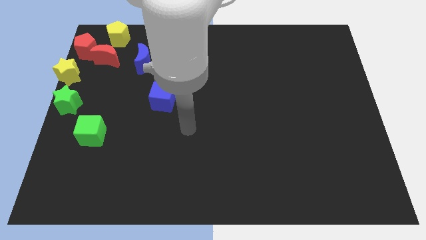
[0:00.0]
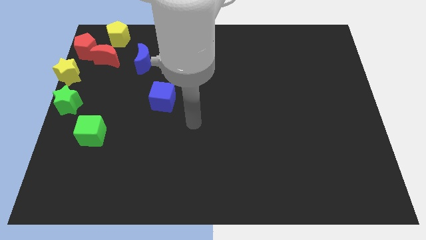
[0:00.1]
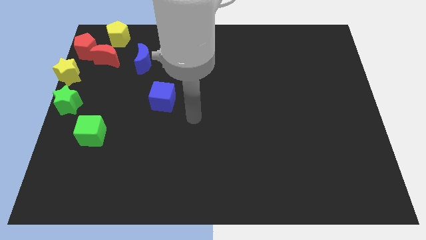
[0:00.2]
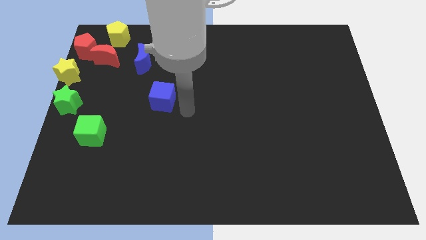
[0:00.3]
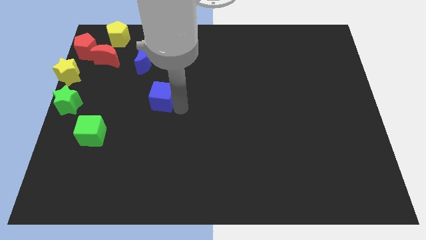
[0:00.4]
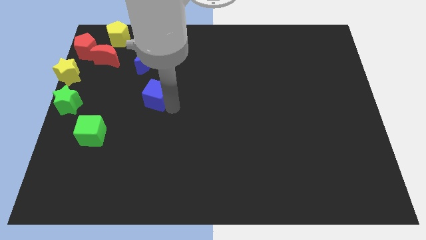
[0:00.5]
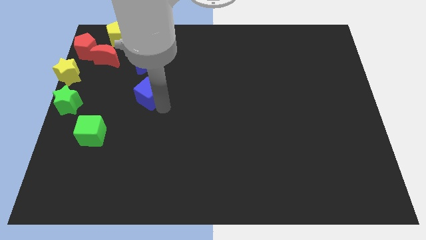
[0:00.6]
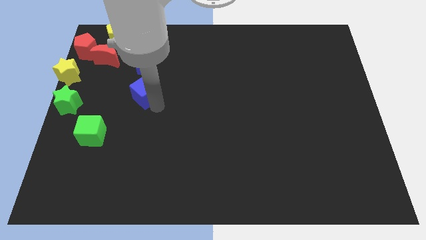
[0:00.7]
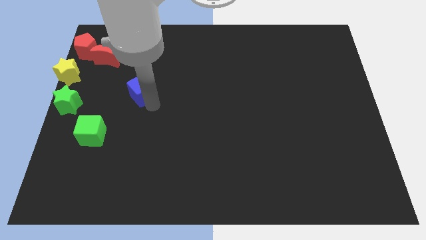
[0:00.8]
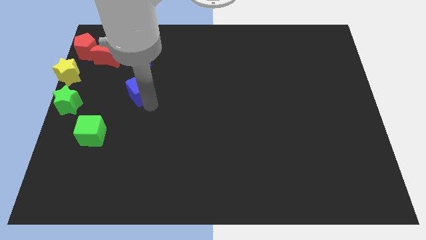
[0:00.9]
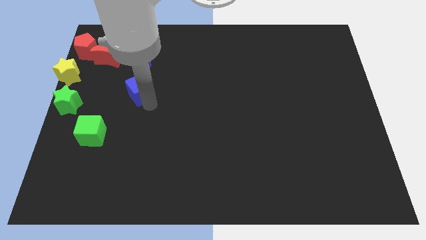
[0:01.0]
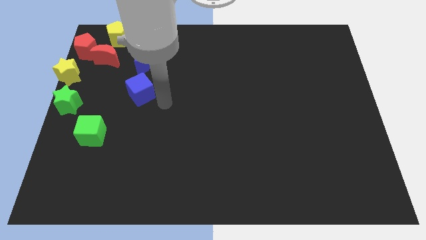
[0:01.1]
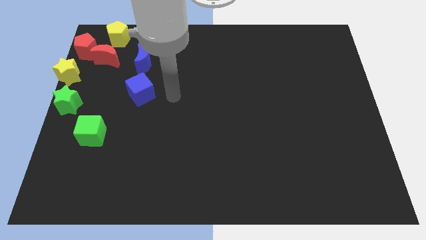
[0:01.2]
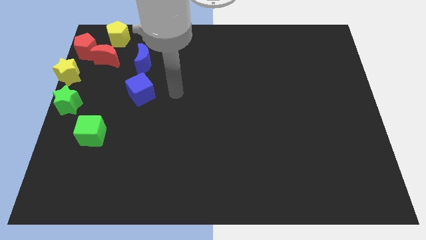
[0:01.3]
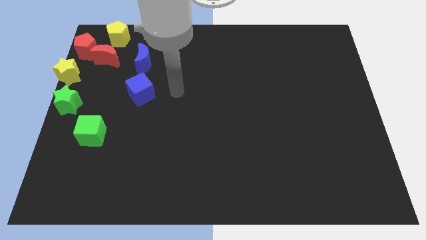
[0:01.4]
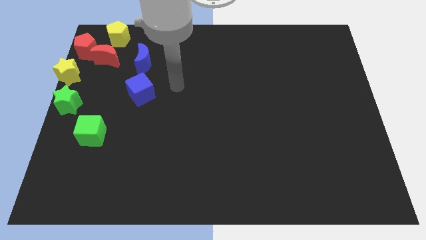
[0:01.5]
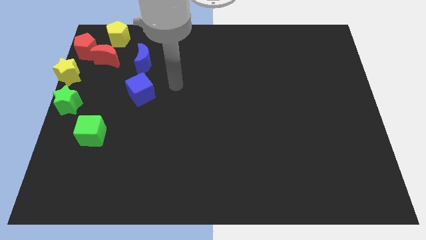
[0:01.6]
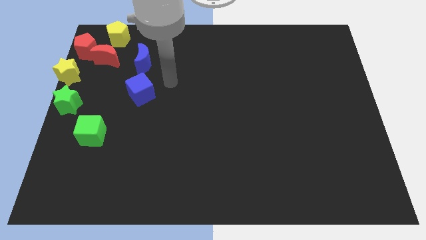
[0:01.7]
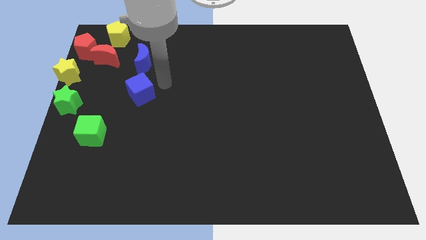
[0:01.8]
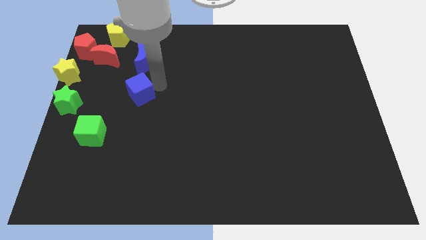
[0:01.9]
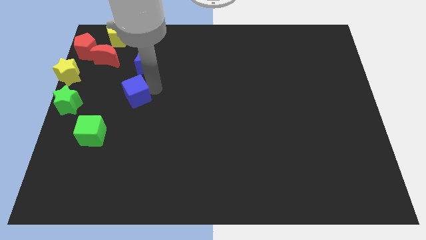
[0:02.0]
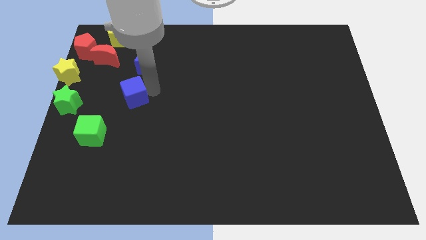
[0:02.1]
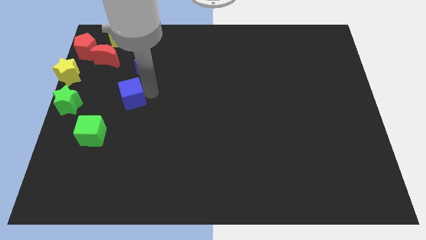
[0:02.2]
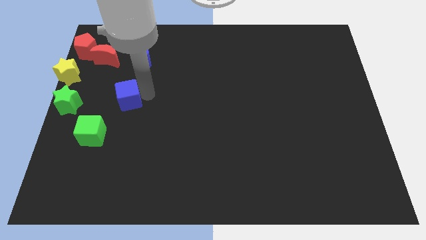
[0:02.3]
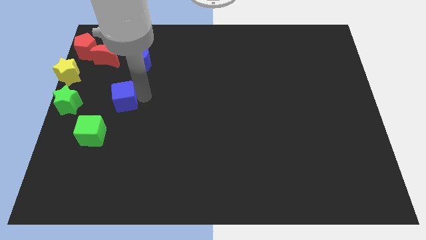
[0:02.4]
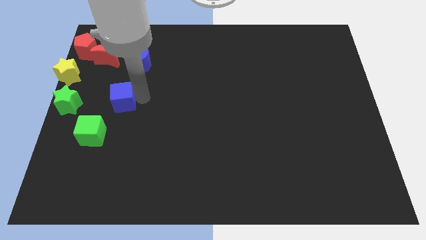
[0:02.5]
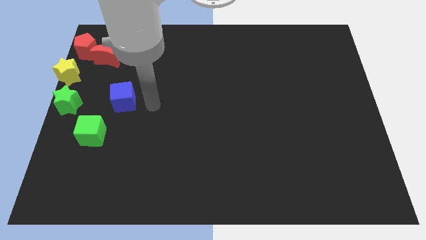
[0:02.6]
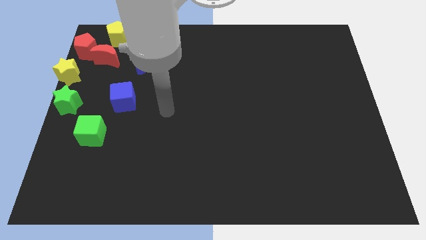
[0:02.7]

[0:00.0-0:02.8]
move the blue cube slightly towards the top right of the green cube

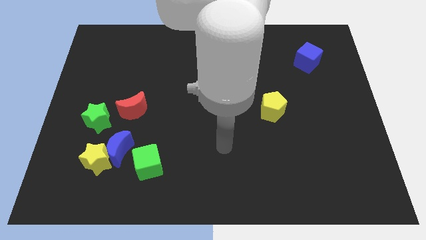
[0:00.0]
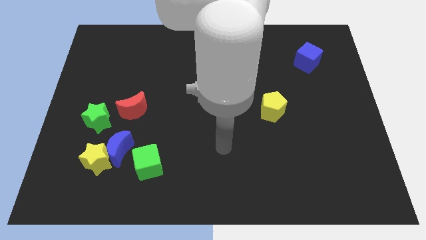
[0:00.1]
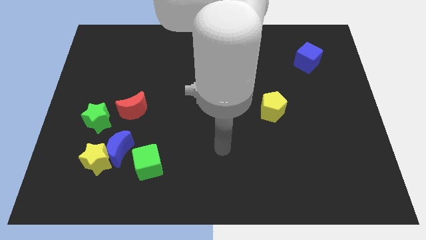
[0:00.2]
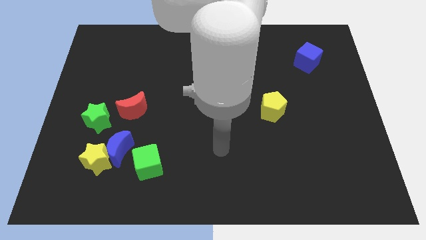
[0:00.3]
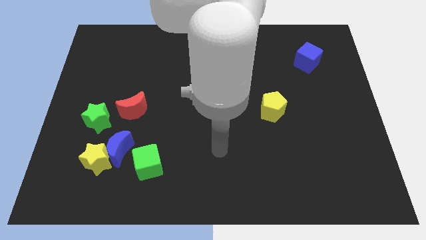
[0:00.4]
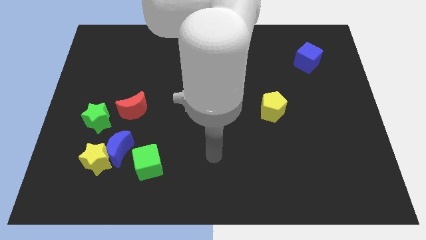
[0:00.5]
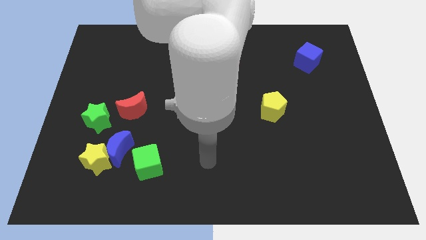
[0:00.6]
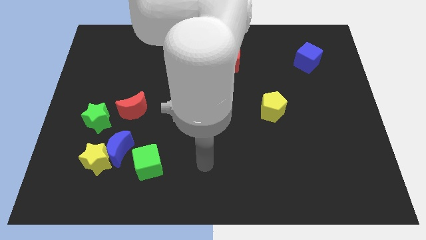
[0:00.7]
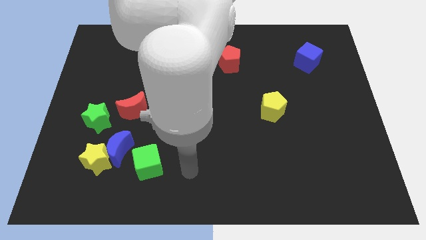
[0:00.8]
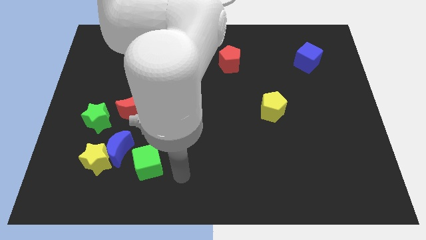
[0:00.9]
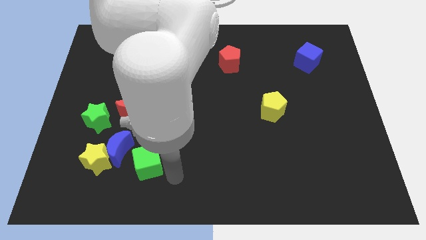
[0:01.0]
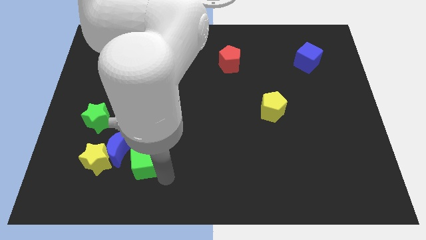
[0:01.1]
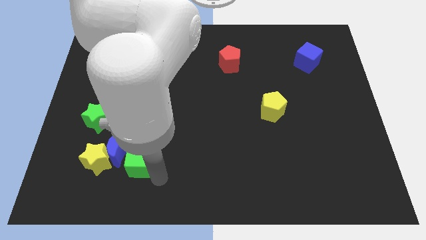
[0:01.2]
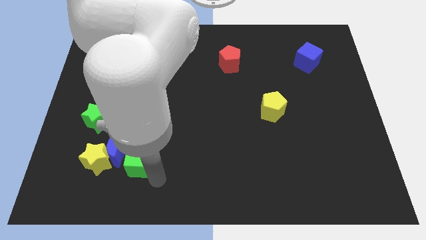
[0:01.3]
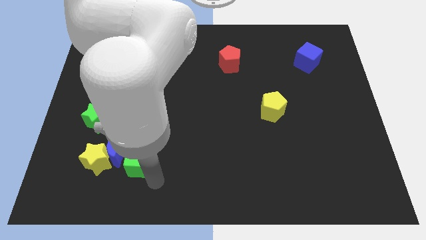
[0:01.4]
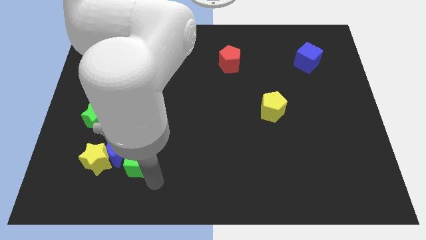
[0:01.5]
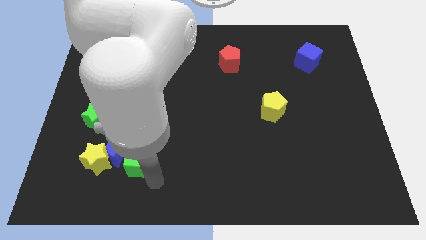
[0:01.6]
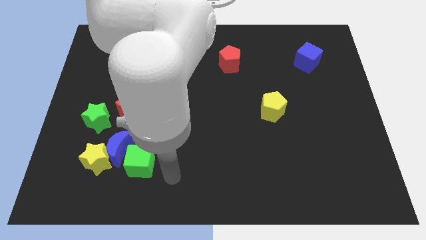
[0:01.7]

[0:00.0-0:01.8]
push the green cube into the blue crescent

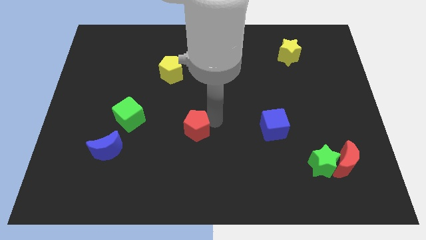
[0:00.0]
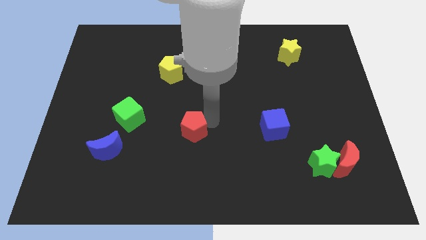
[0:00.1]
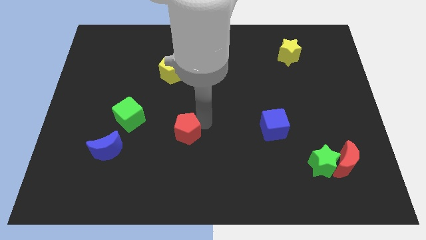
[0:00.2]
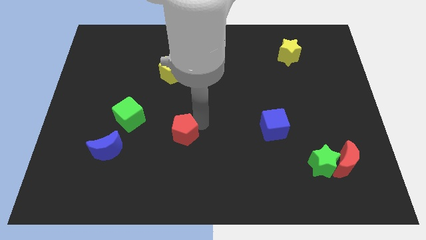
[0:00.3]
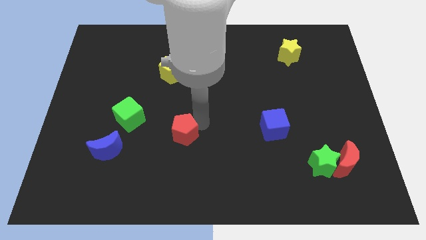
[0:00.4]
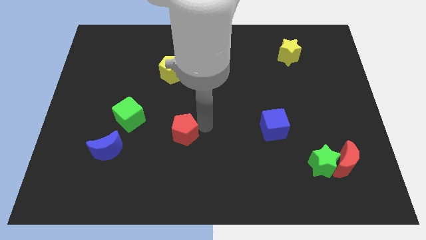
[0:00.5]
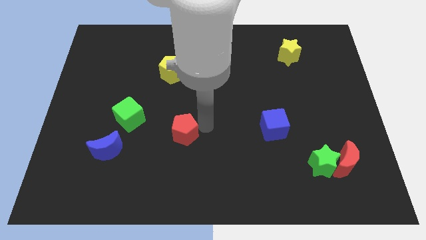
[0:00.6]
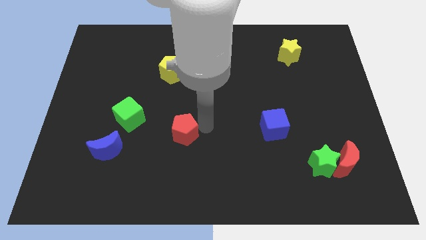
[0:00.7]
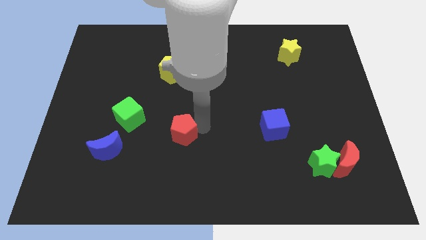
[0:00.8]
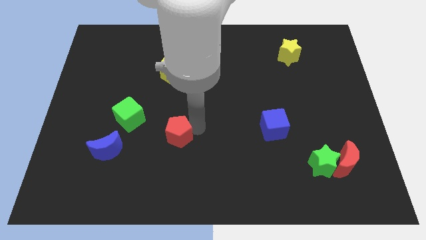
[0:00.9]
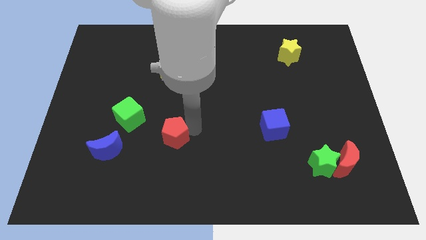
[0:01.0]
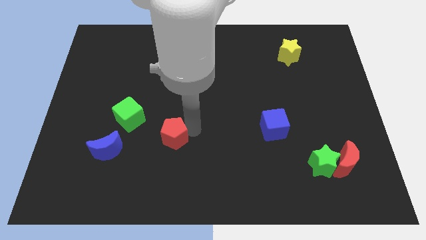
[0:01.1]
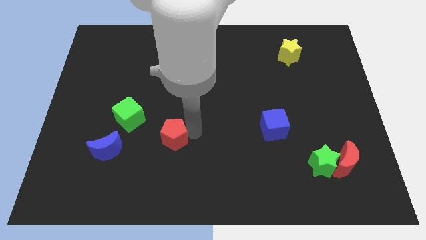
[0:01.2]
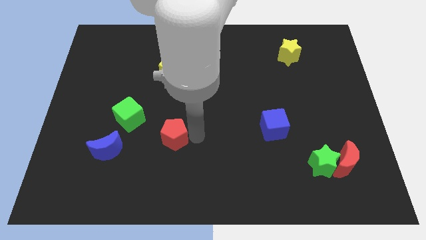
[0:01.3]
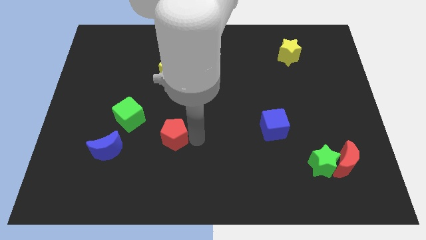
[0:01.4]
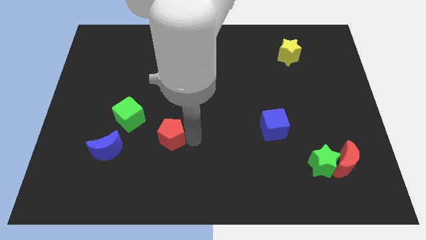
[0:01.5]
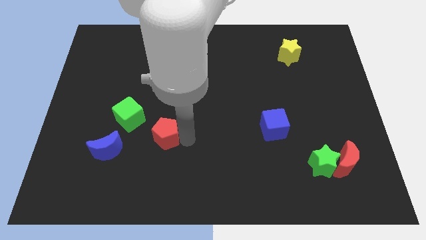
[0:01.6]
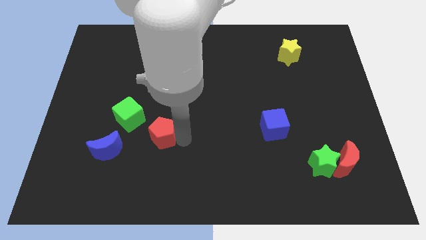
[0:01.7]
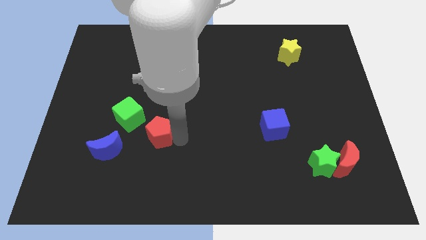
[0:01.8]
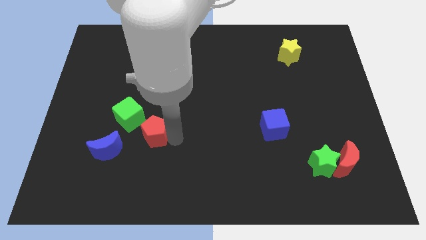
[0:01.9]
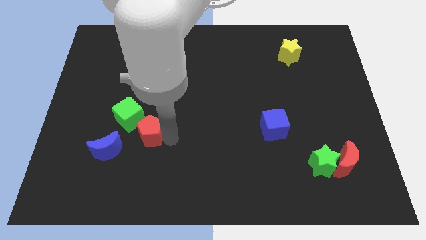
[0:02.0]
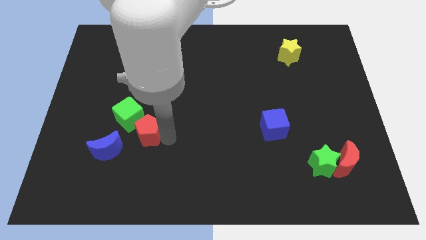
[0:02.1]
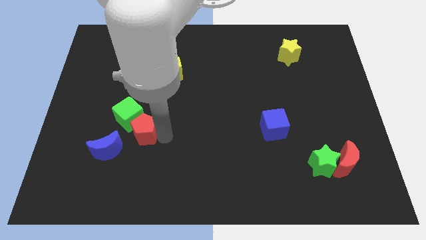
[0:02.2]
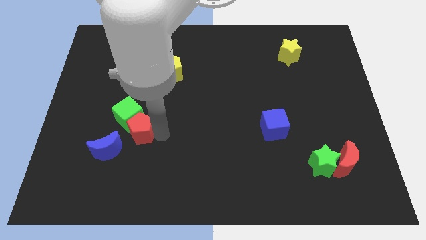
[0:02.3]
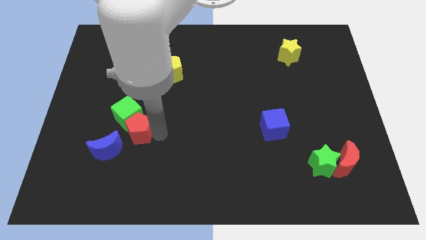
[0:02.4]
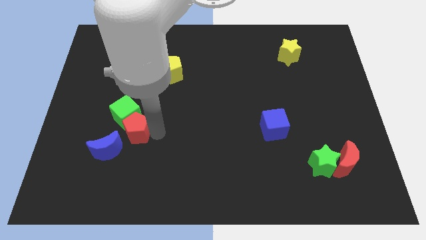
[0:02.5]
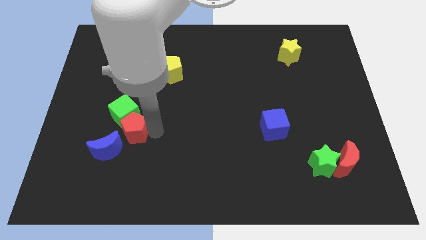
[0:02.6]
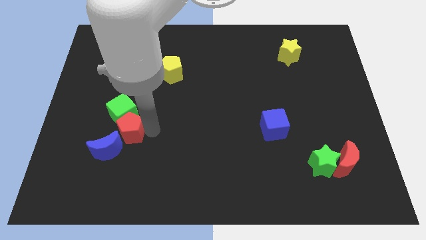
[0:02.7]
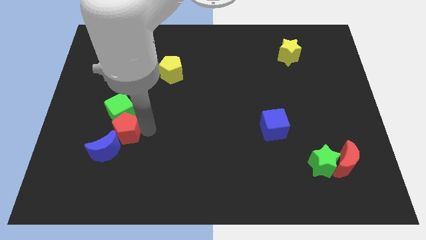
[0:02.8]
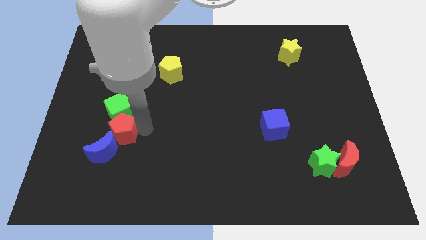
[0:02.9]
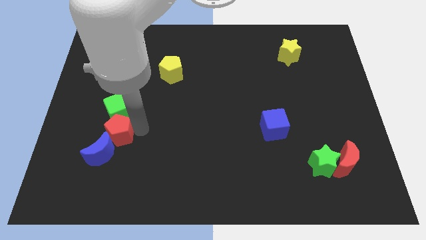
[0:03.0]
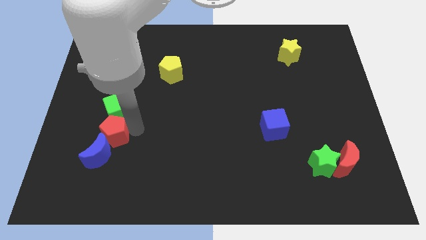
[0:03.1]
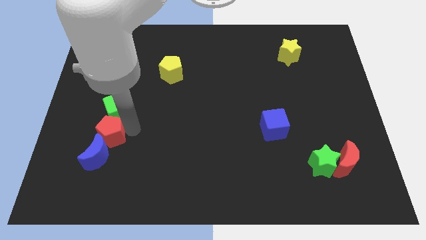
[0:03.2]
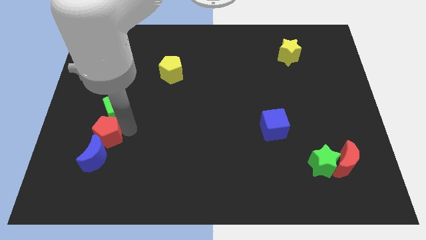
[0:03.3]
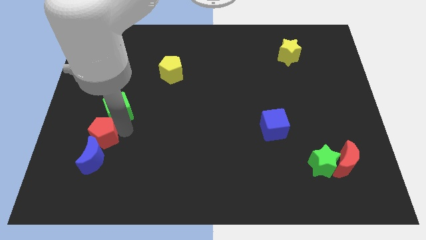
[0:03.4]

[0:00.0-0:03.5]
push red pentagon in between green cube and blue crescent

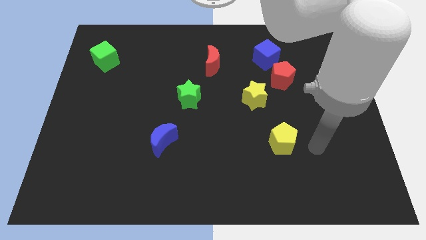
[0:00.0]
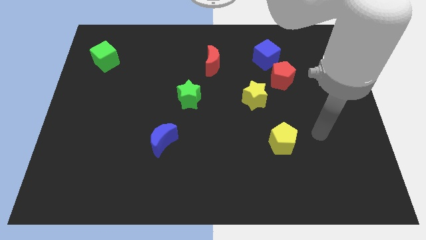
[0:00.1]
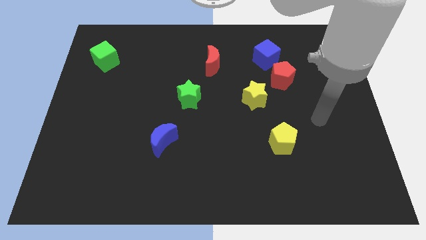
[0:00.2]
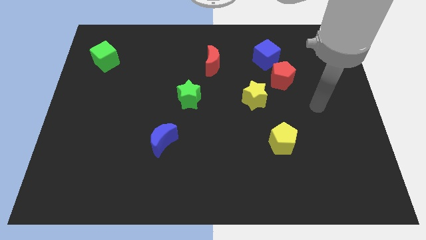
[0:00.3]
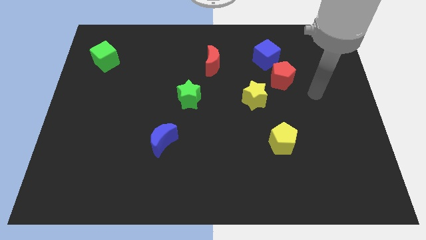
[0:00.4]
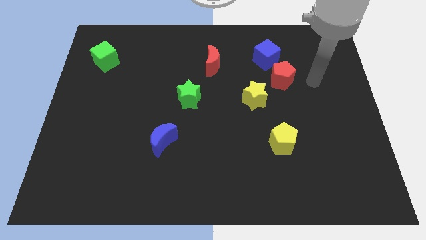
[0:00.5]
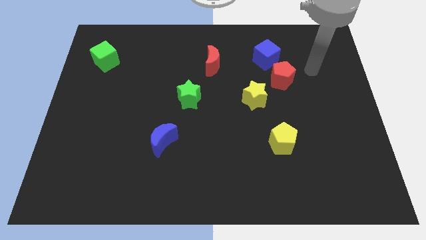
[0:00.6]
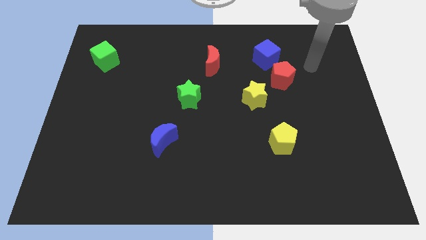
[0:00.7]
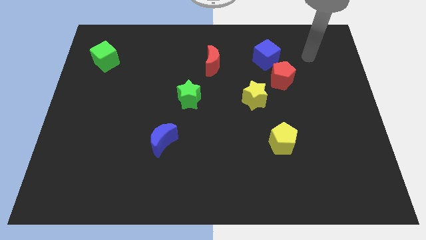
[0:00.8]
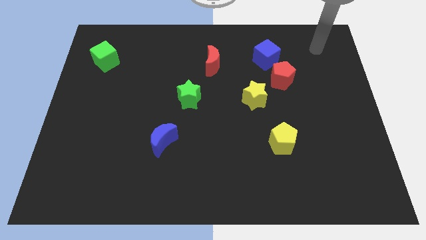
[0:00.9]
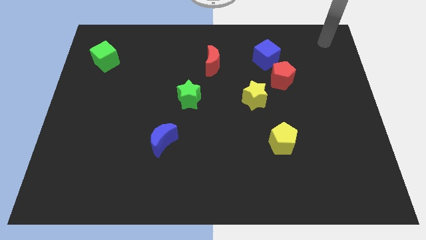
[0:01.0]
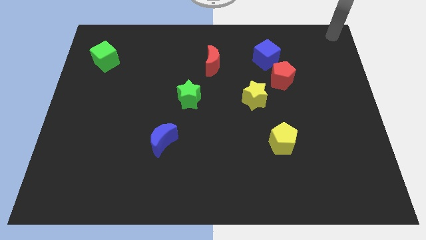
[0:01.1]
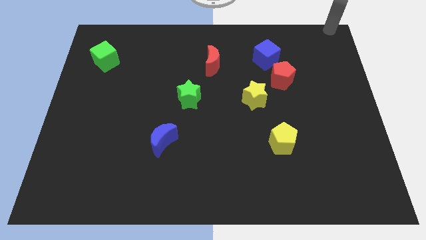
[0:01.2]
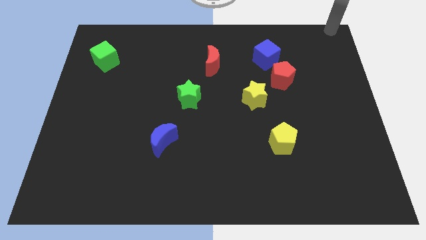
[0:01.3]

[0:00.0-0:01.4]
point your arm at the top right corner of the board
